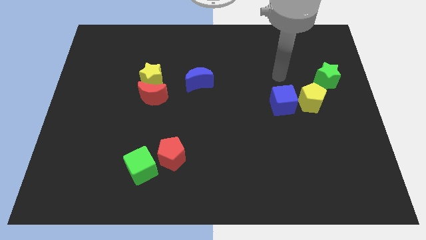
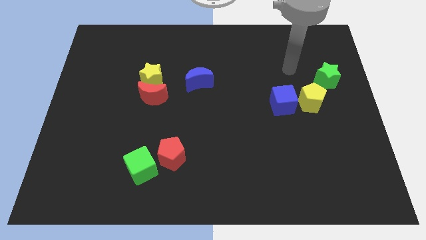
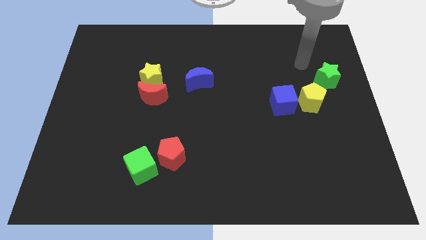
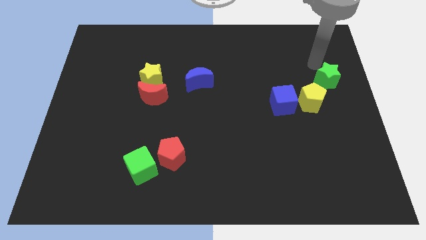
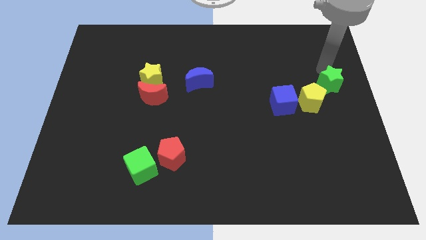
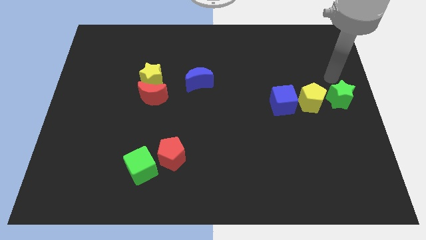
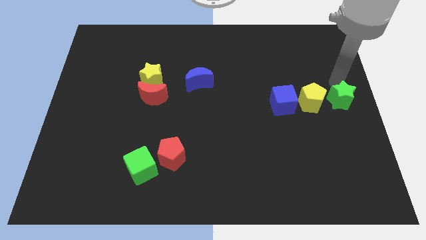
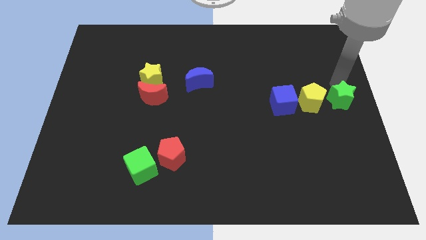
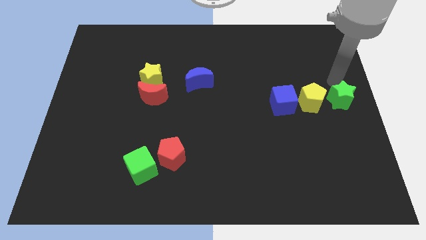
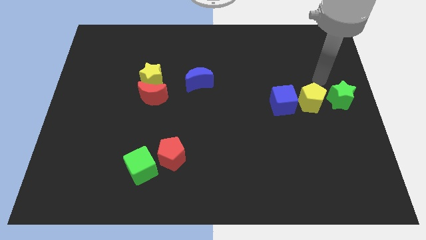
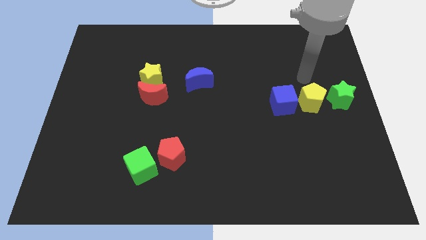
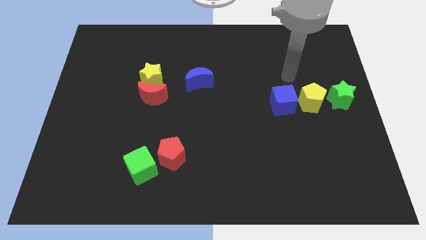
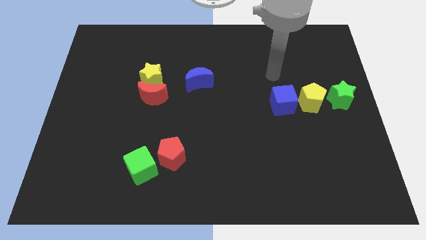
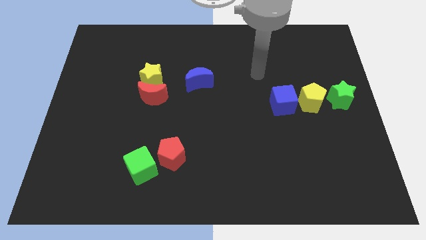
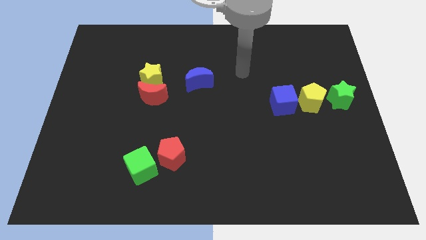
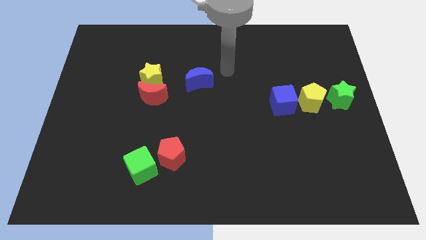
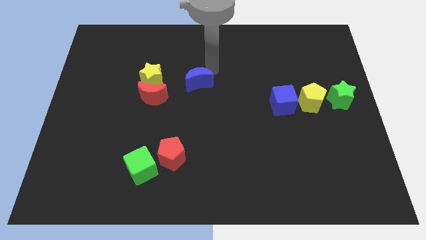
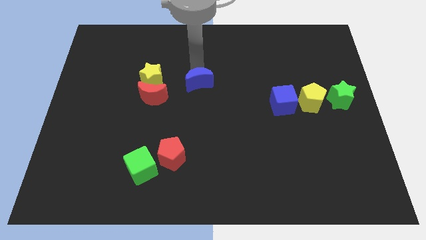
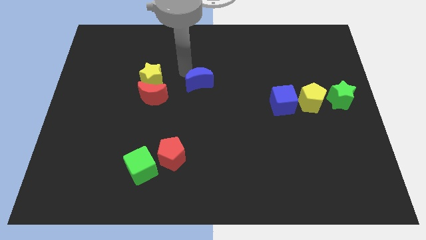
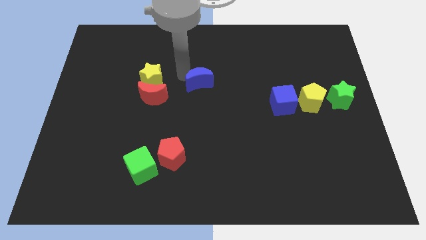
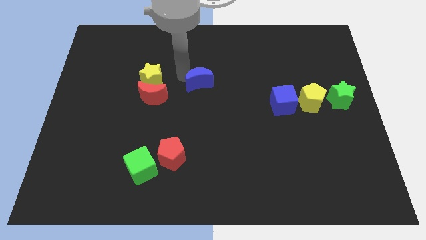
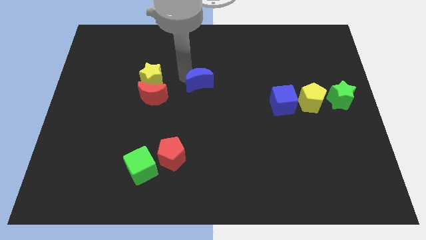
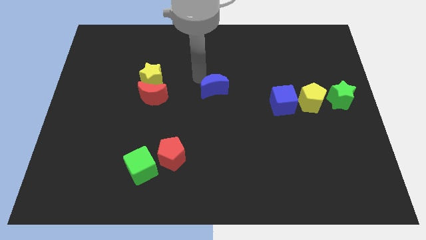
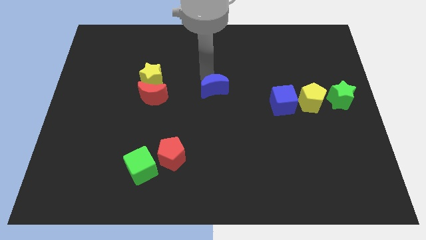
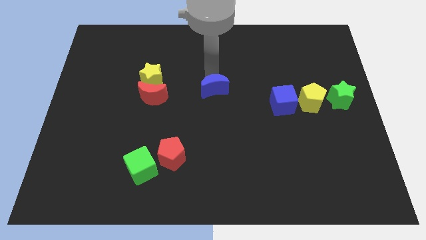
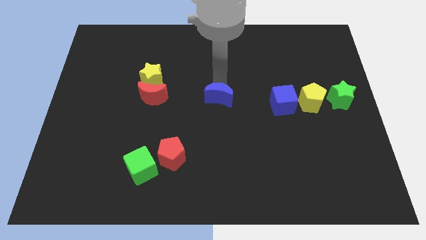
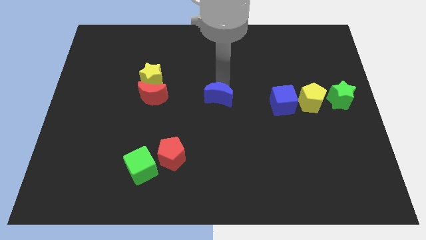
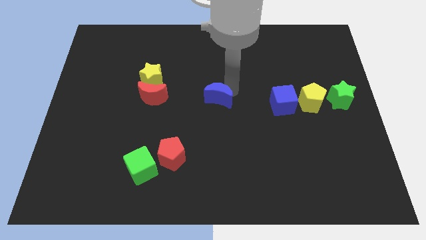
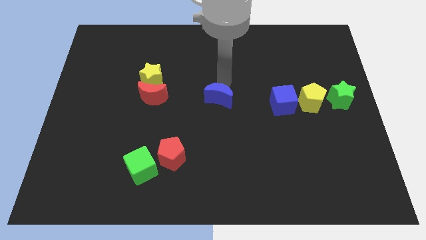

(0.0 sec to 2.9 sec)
place the blue moon right to the red moon

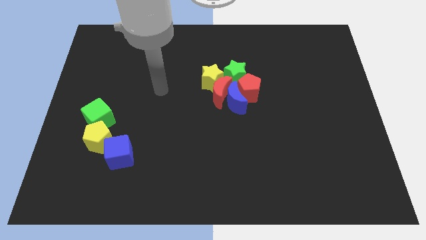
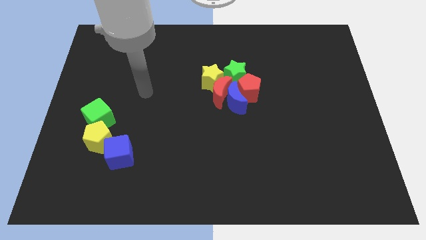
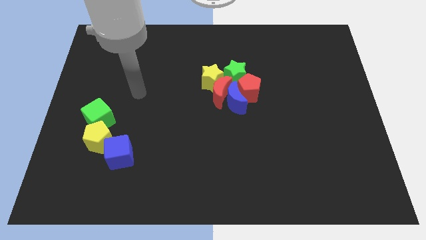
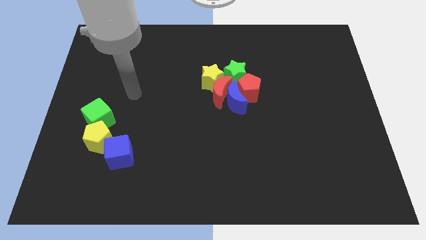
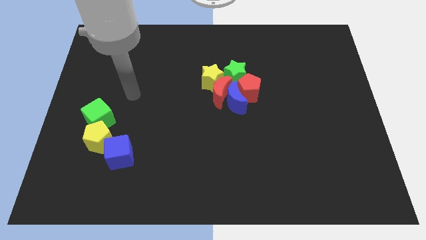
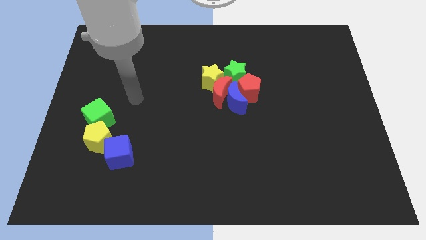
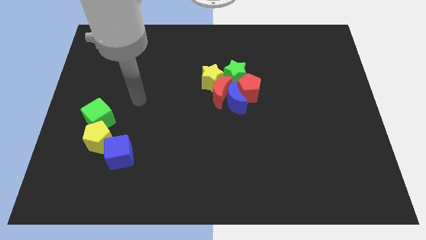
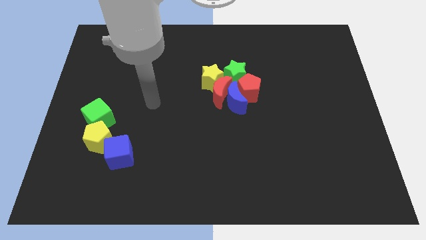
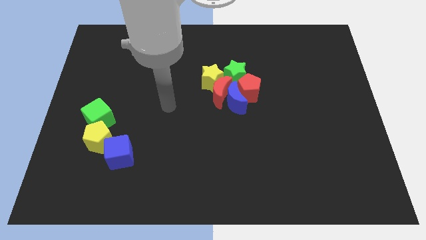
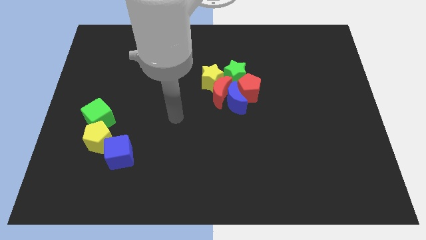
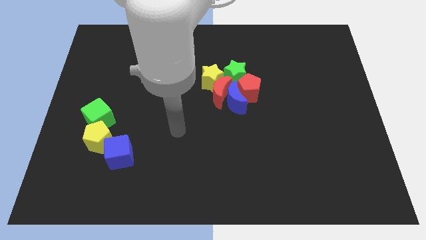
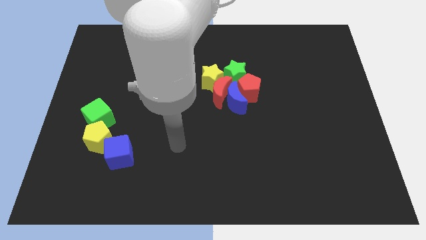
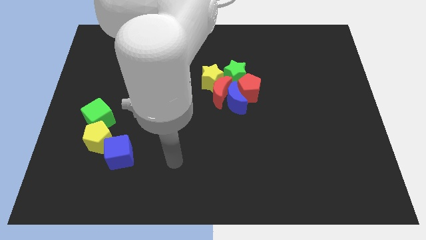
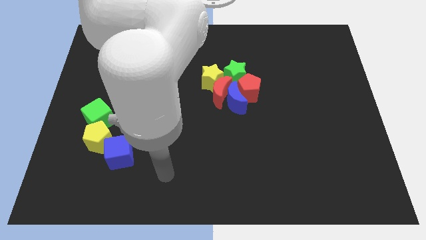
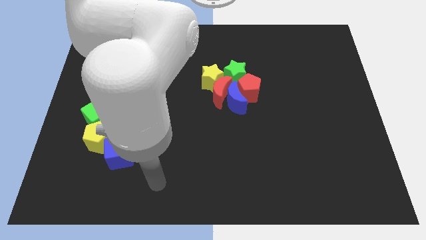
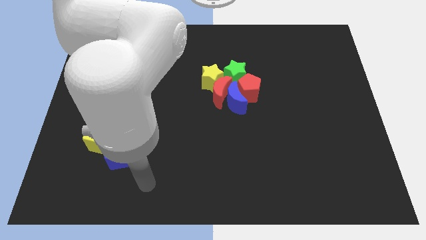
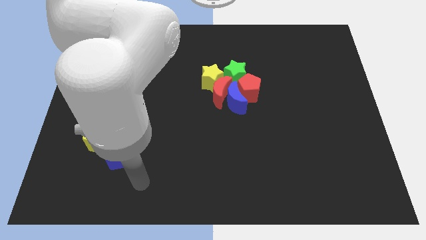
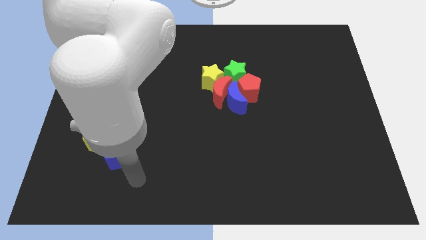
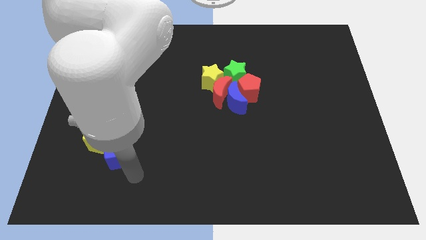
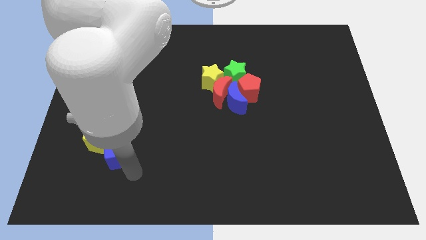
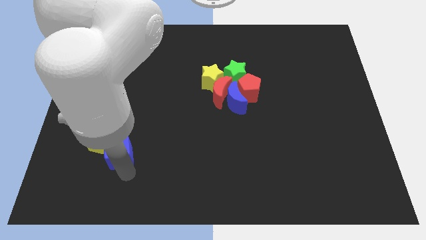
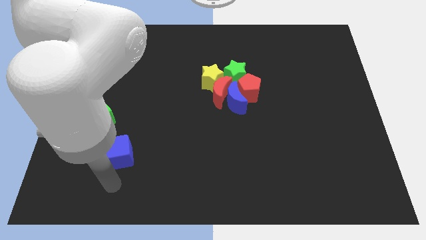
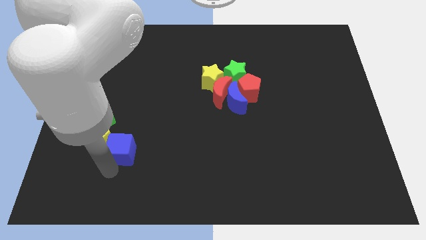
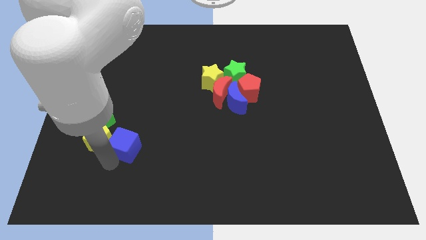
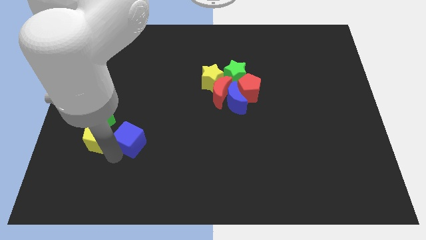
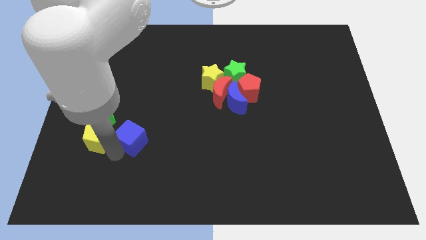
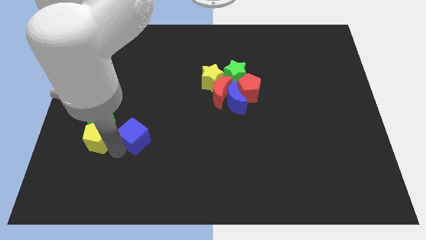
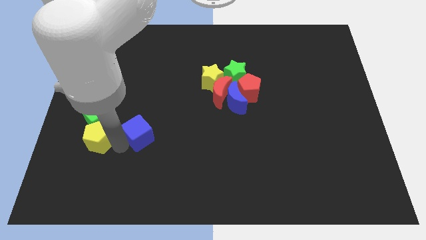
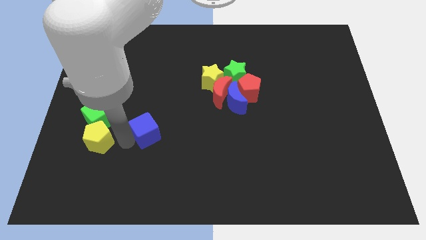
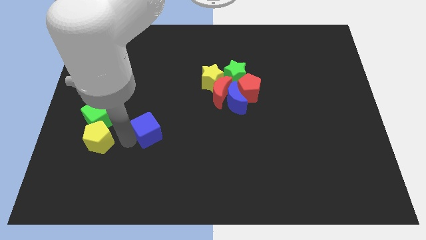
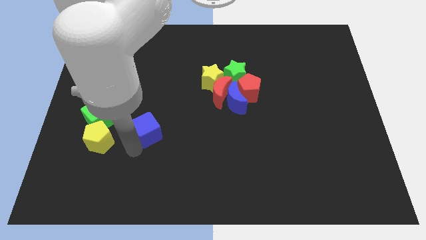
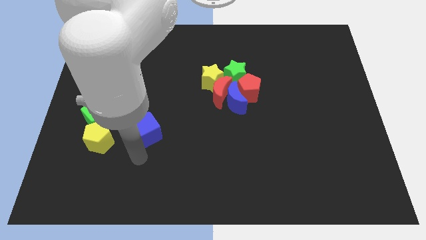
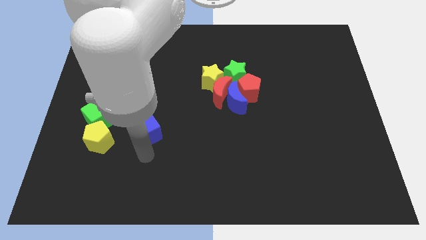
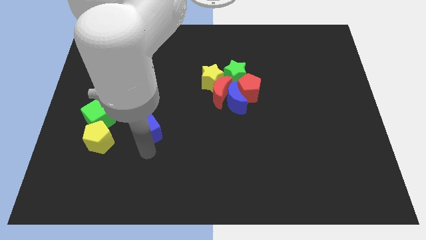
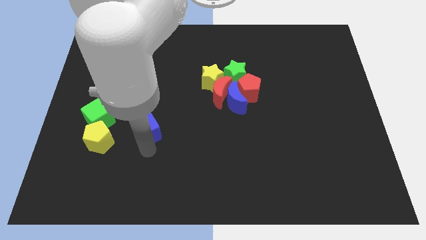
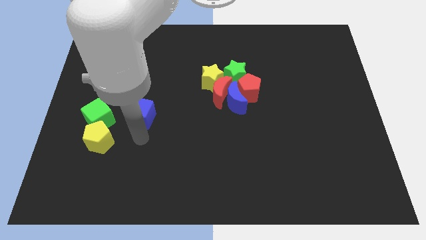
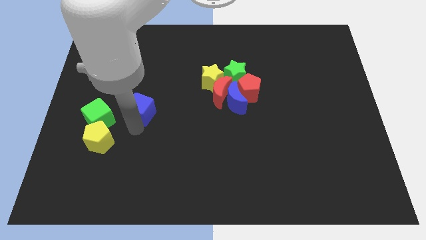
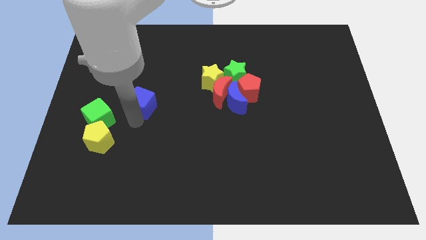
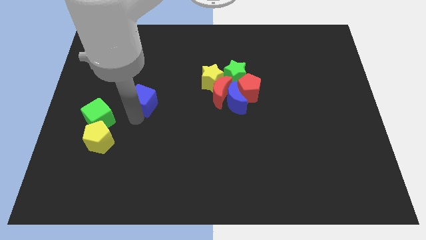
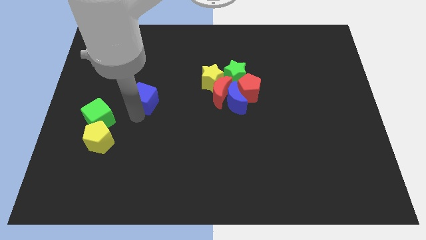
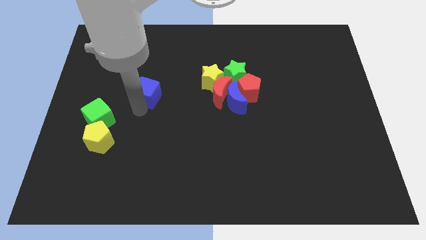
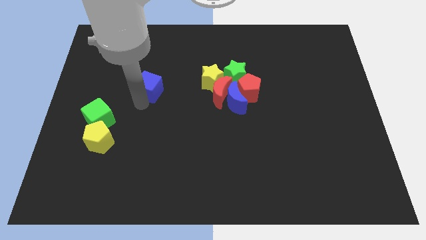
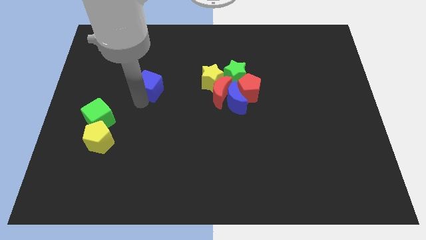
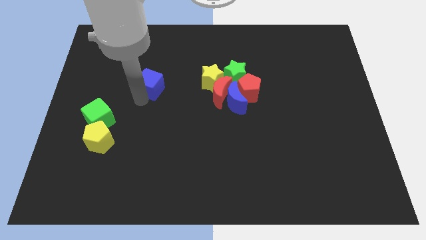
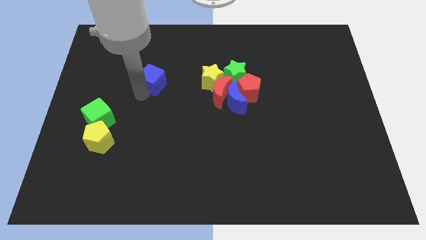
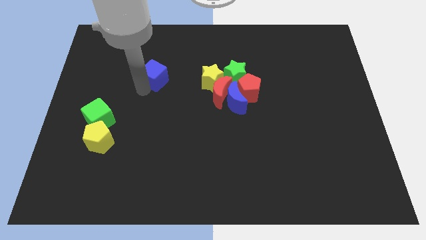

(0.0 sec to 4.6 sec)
push the blue cube to the center of the board

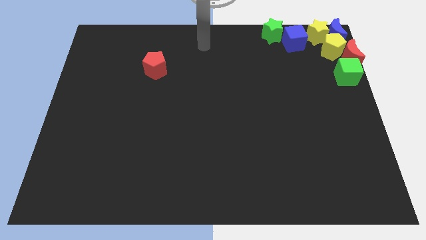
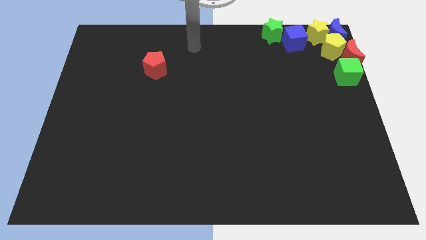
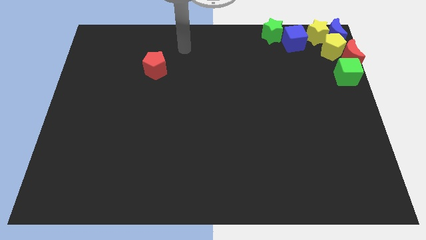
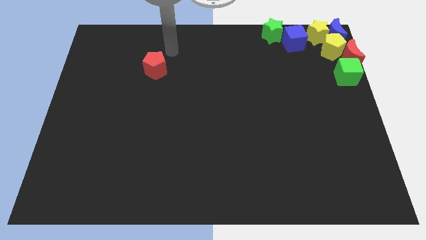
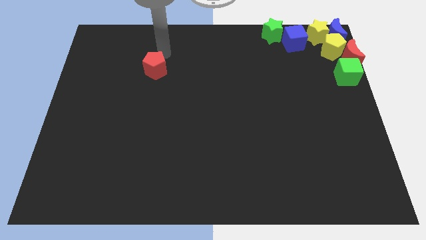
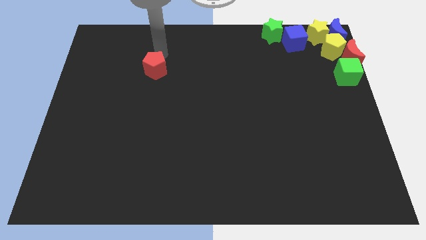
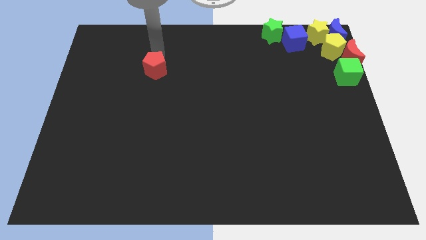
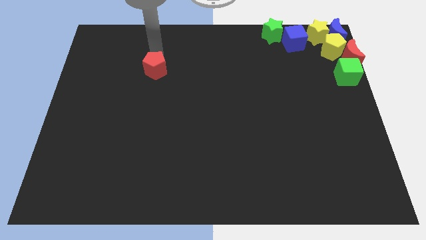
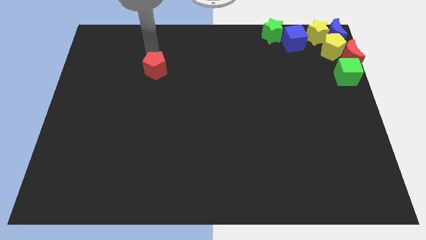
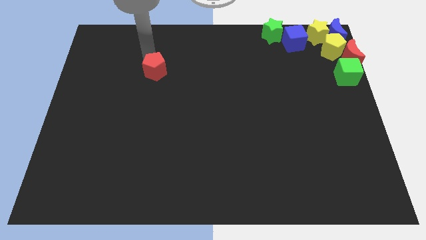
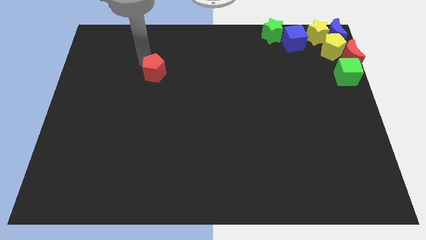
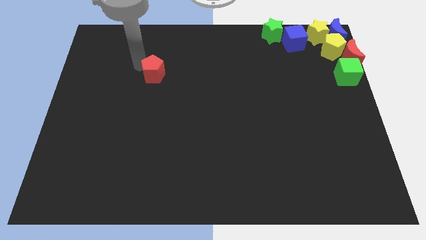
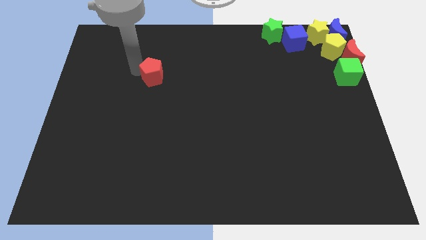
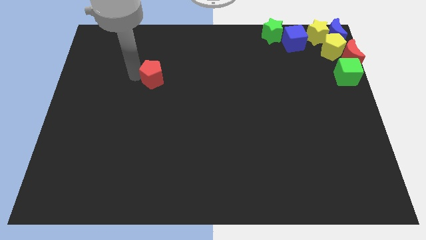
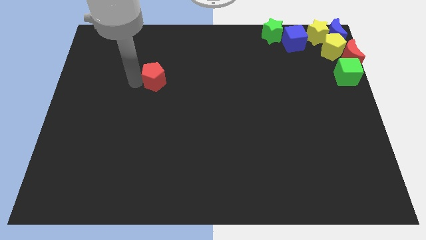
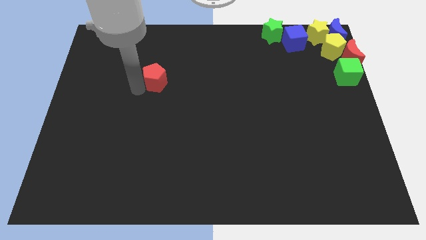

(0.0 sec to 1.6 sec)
slightly move the red pentagon towards down

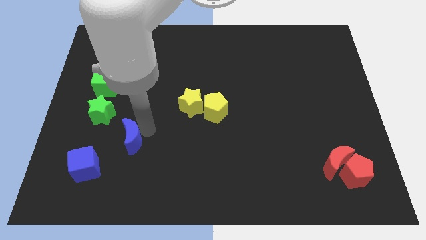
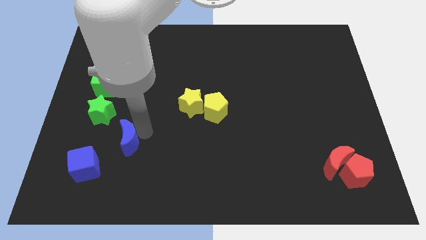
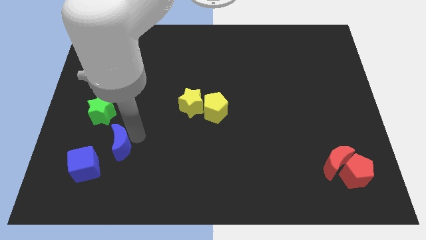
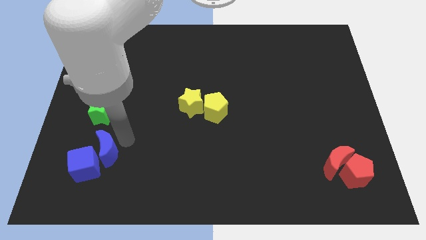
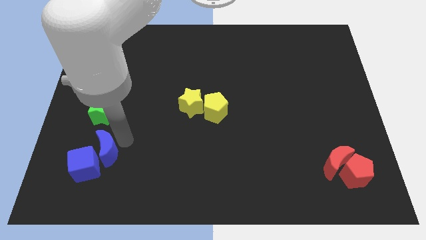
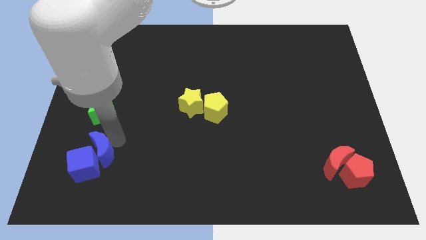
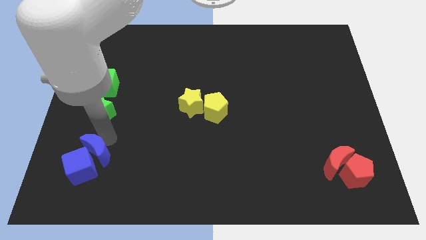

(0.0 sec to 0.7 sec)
move the blue crescent right to the blue cube
